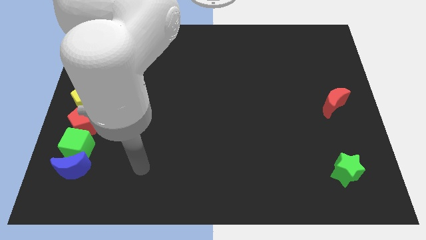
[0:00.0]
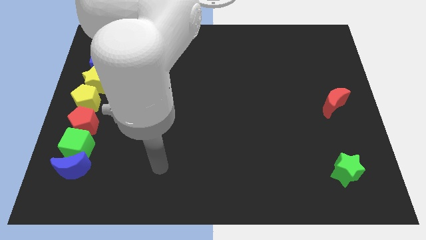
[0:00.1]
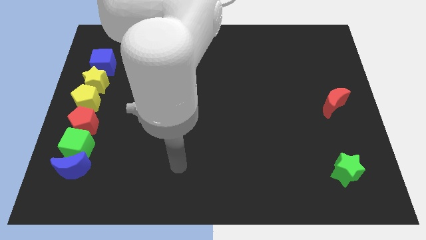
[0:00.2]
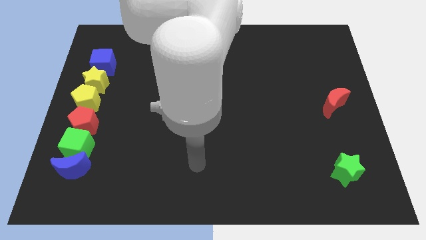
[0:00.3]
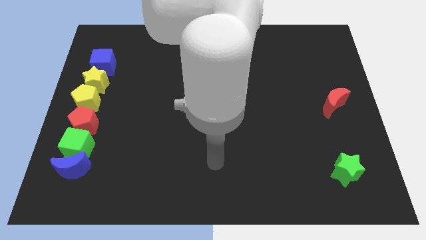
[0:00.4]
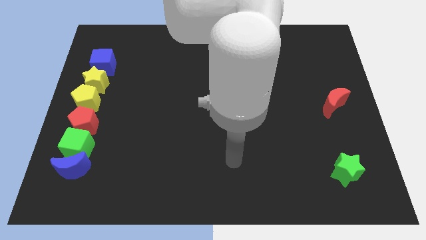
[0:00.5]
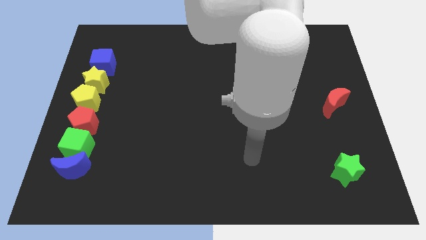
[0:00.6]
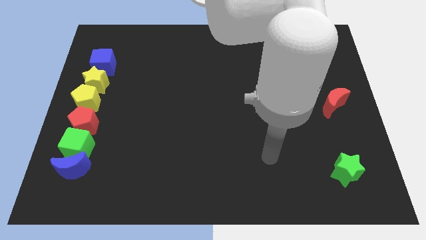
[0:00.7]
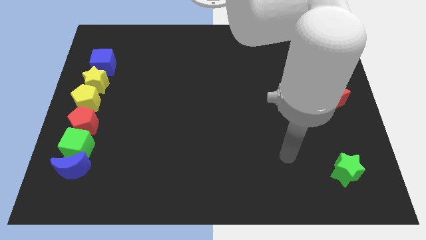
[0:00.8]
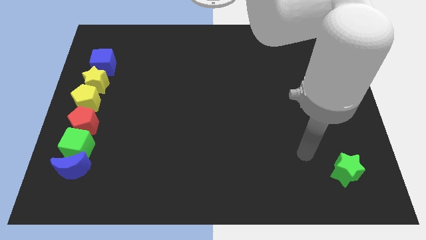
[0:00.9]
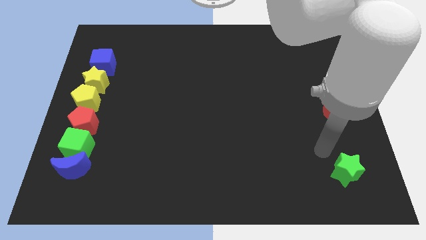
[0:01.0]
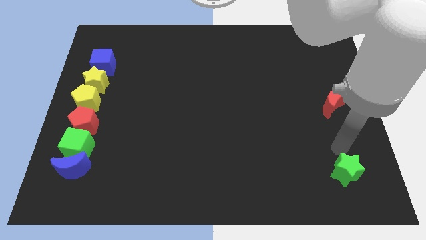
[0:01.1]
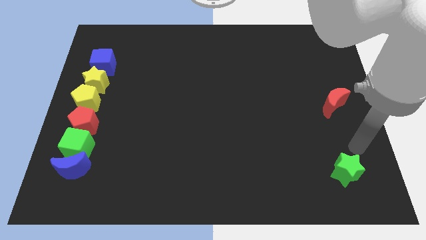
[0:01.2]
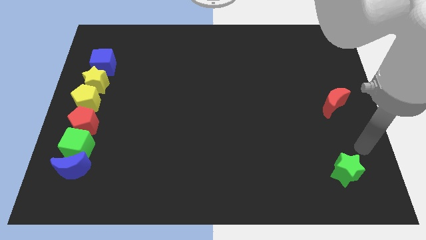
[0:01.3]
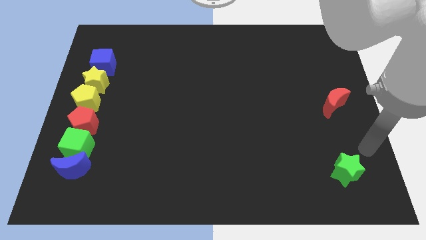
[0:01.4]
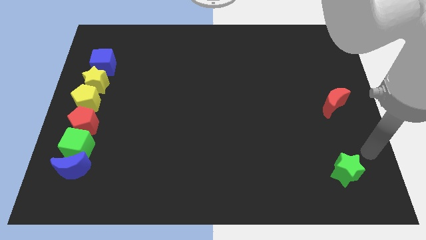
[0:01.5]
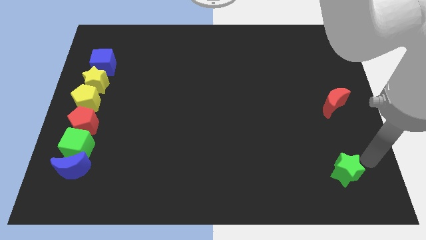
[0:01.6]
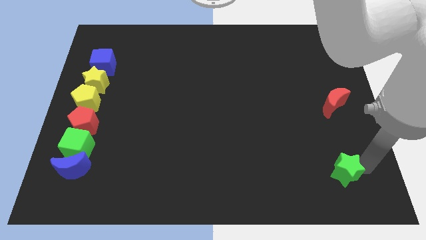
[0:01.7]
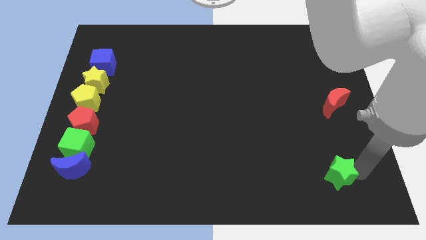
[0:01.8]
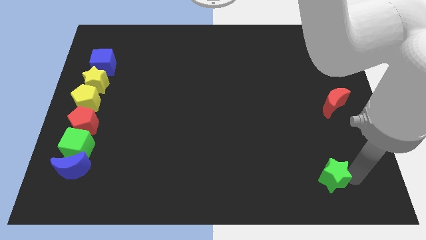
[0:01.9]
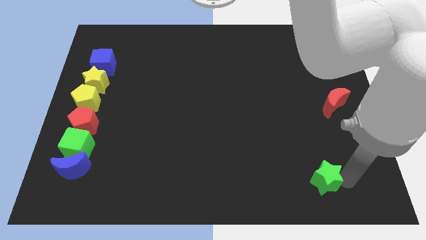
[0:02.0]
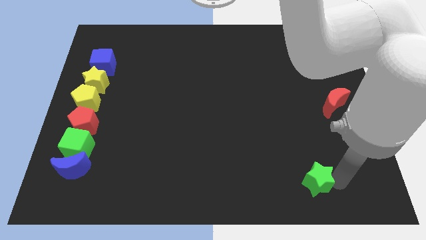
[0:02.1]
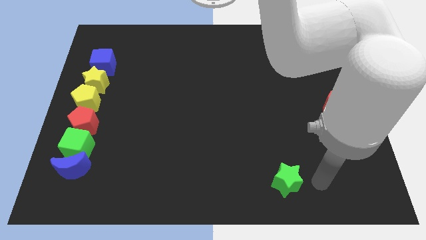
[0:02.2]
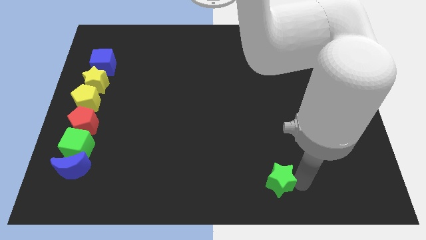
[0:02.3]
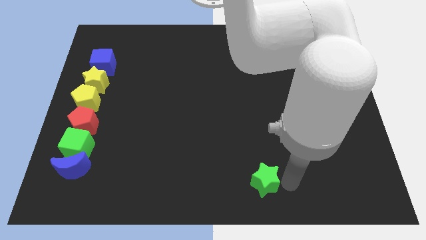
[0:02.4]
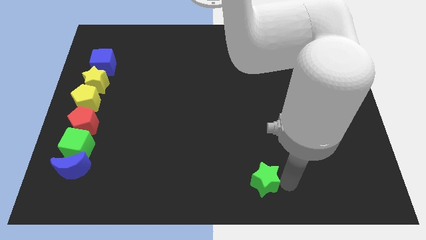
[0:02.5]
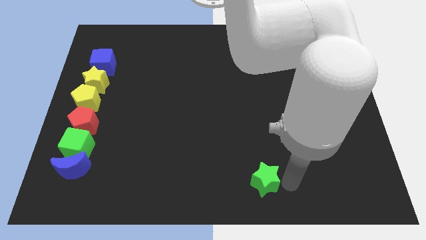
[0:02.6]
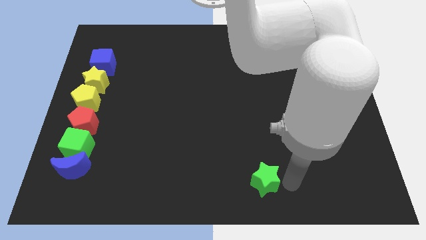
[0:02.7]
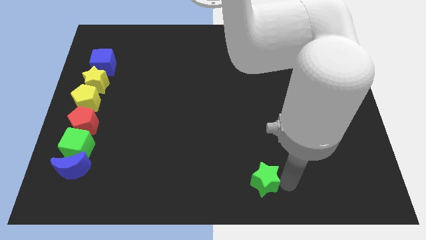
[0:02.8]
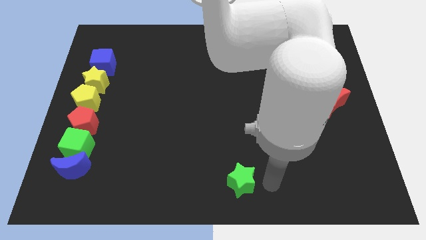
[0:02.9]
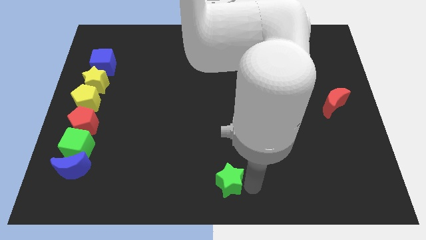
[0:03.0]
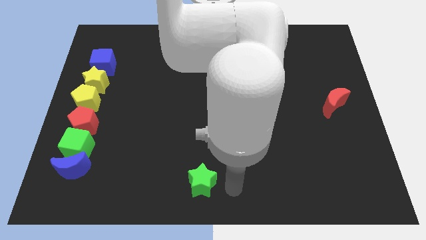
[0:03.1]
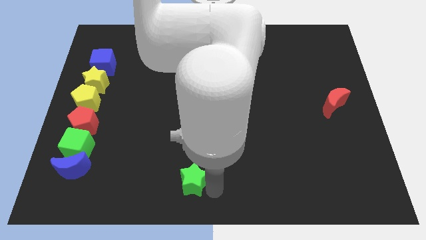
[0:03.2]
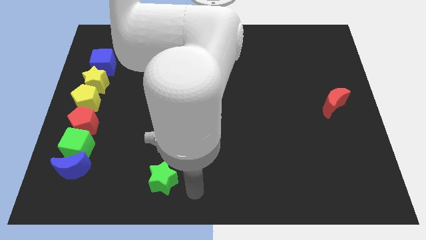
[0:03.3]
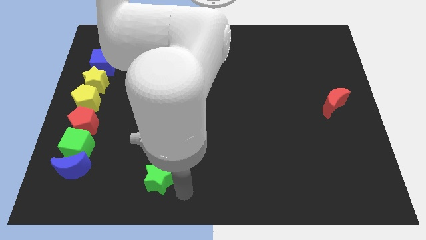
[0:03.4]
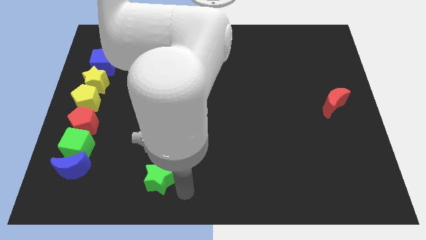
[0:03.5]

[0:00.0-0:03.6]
move the green star towards the left side

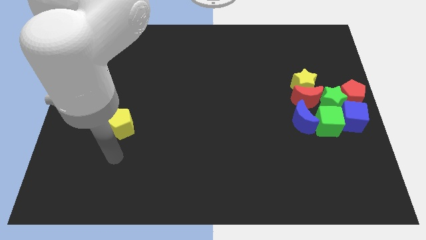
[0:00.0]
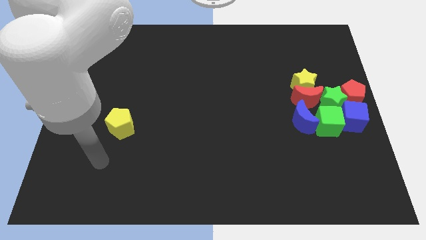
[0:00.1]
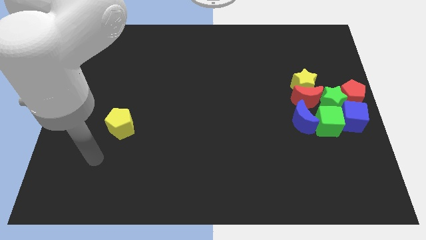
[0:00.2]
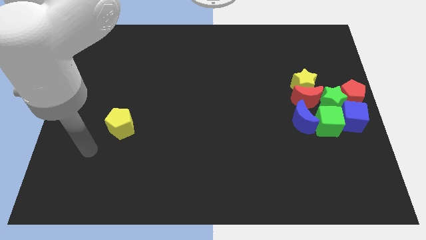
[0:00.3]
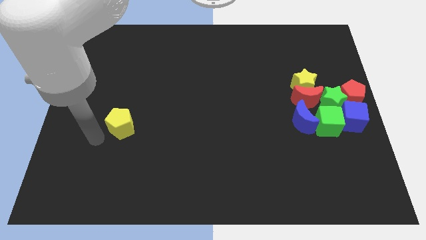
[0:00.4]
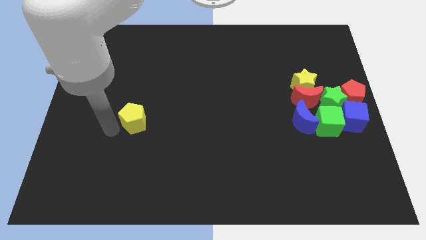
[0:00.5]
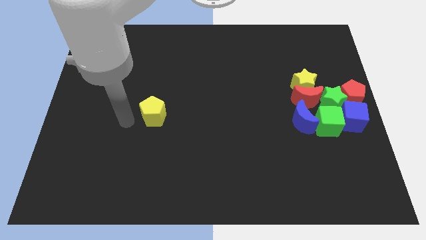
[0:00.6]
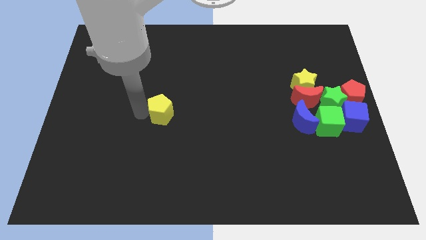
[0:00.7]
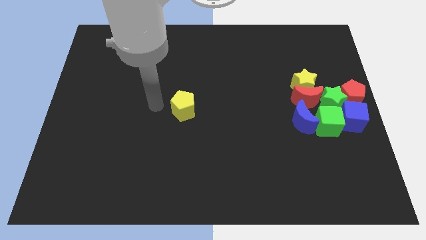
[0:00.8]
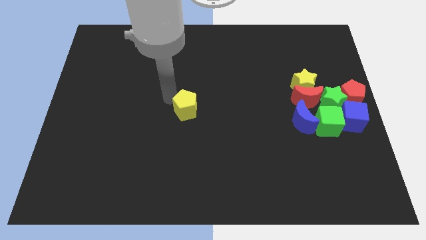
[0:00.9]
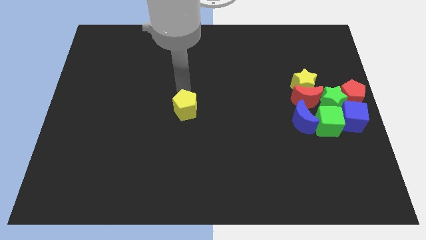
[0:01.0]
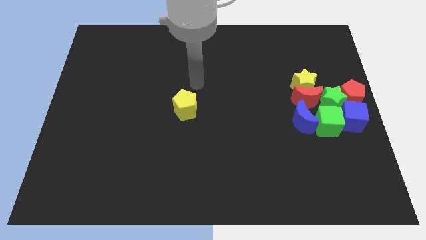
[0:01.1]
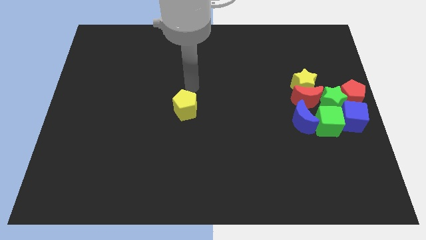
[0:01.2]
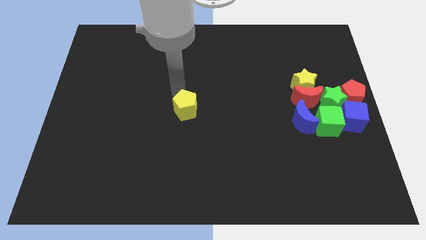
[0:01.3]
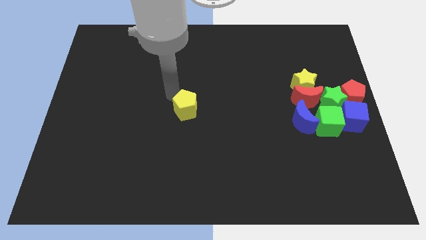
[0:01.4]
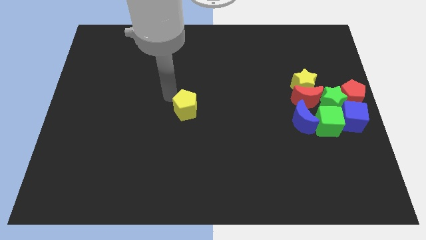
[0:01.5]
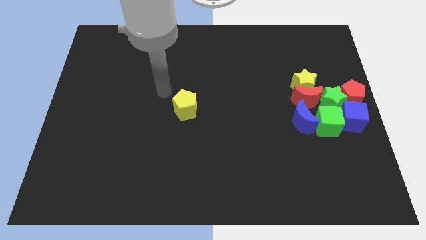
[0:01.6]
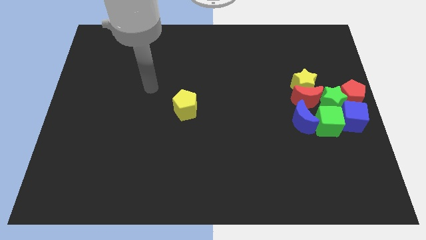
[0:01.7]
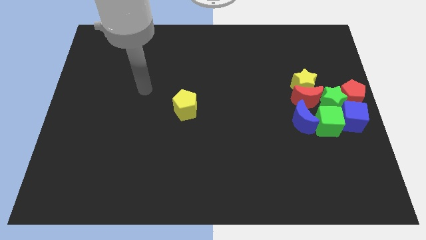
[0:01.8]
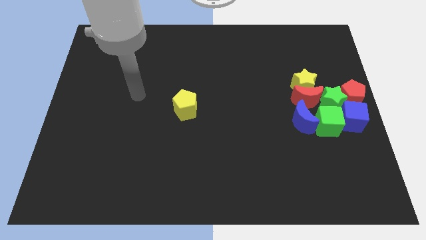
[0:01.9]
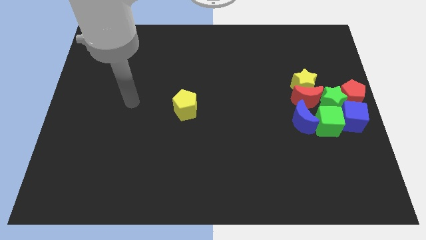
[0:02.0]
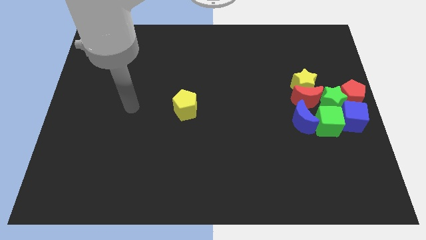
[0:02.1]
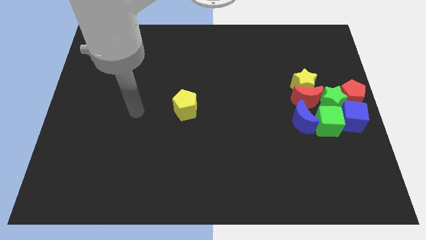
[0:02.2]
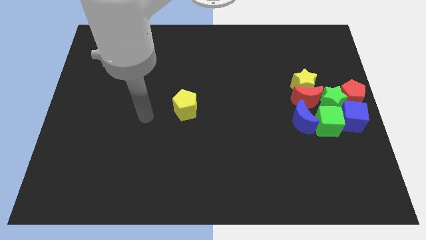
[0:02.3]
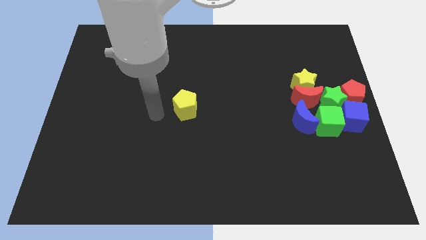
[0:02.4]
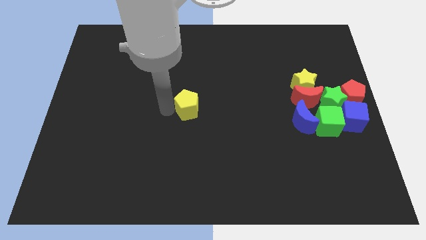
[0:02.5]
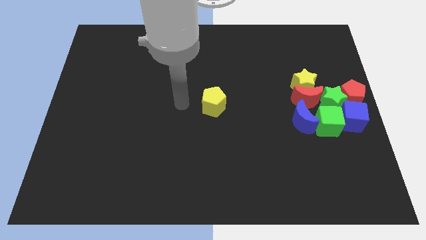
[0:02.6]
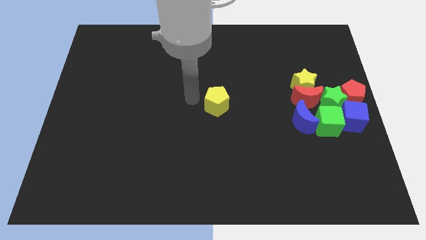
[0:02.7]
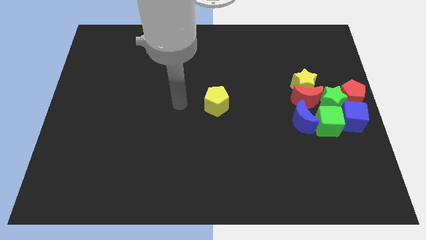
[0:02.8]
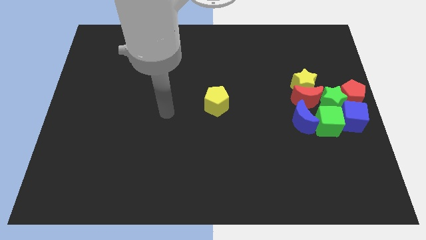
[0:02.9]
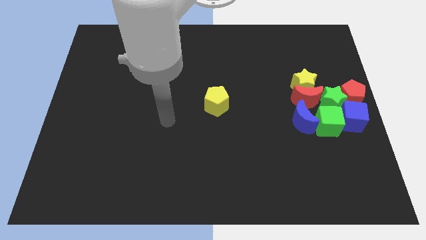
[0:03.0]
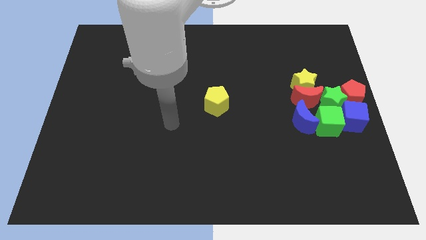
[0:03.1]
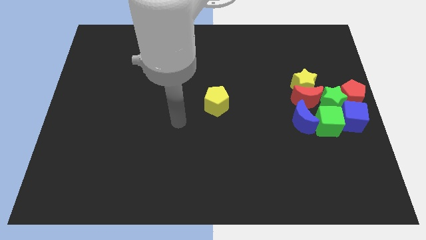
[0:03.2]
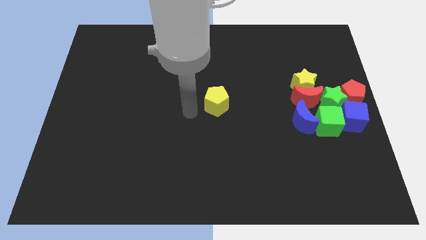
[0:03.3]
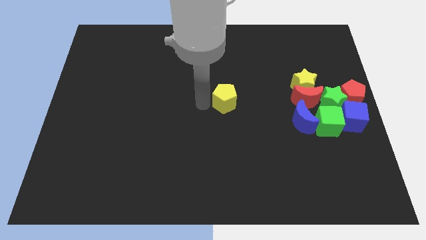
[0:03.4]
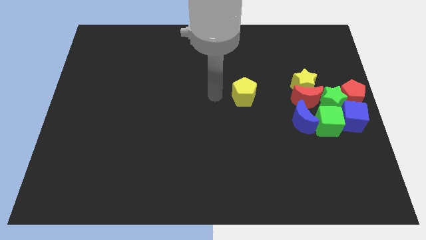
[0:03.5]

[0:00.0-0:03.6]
move yellow pentagon parallel left to red moon

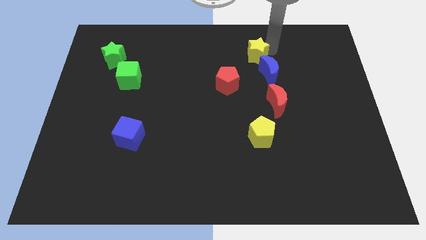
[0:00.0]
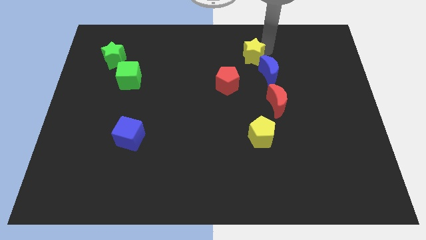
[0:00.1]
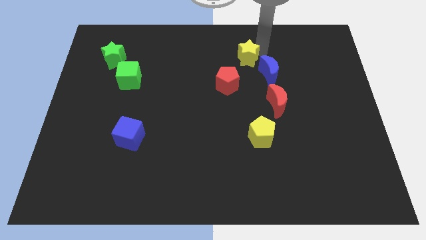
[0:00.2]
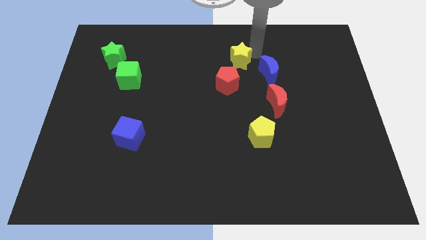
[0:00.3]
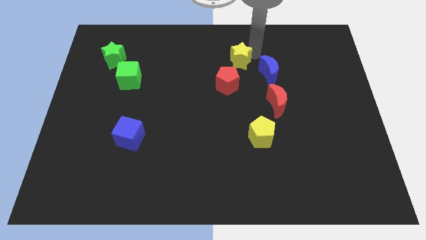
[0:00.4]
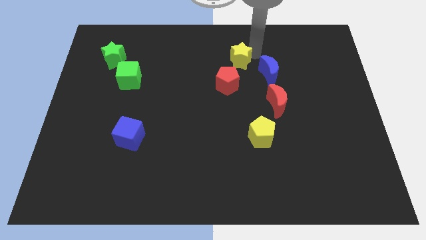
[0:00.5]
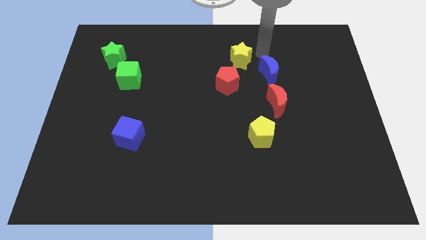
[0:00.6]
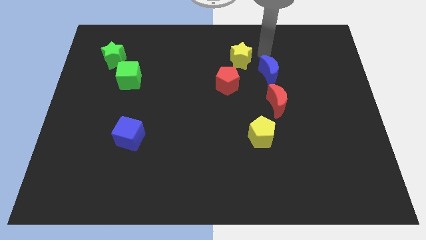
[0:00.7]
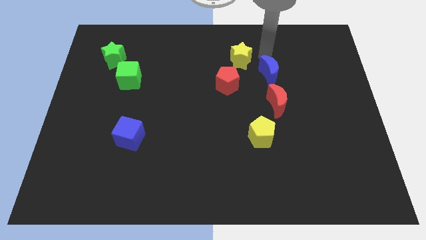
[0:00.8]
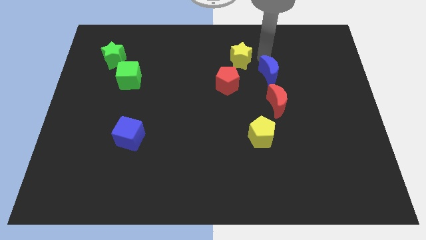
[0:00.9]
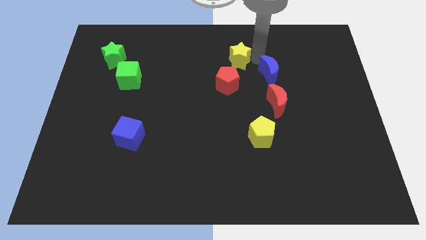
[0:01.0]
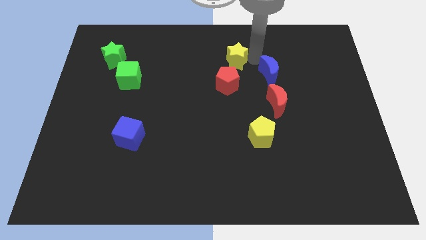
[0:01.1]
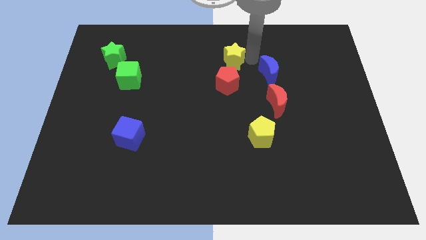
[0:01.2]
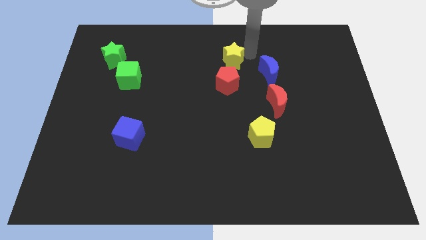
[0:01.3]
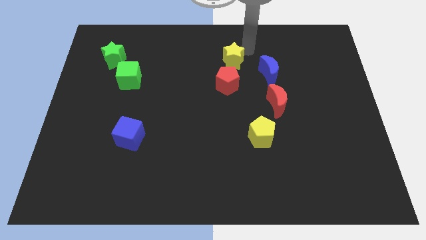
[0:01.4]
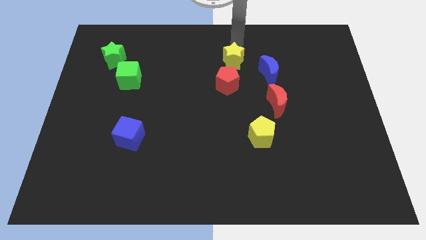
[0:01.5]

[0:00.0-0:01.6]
move the yellow star near the red pentagon

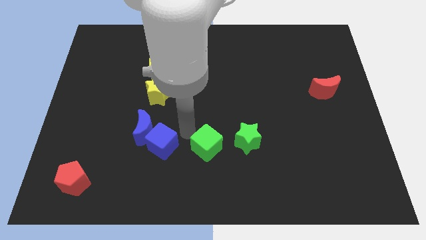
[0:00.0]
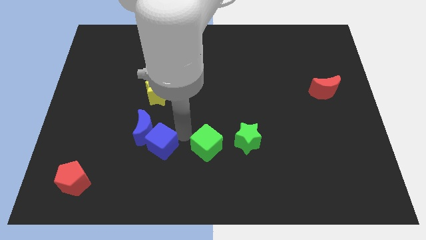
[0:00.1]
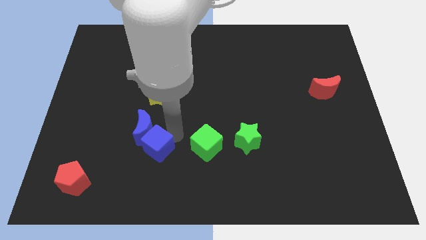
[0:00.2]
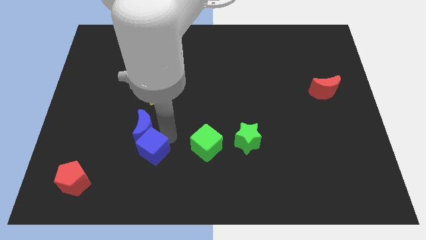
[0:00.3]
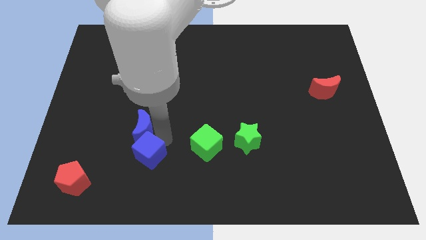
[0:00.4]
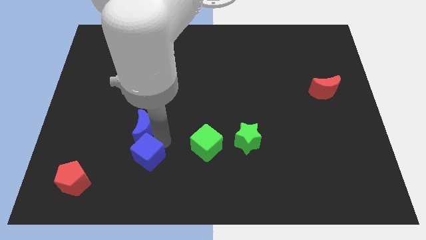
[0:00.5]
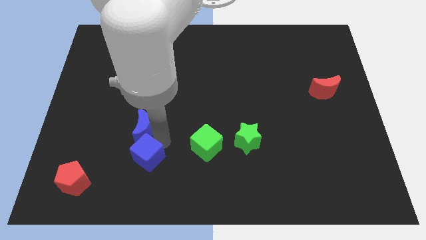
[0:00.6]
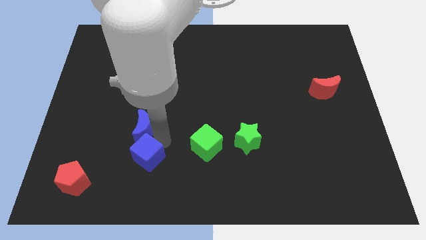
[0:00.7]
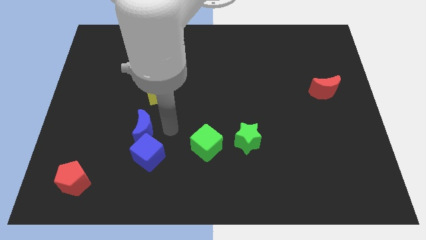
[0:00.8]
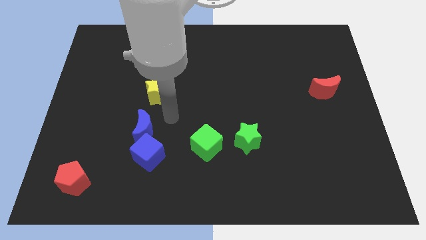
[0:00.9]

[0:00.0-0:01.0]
move the blue cube below the blue crescent
